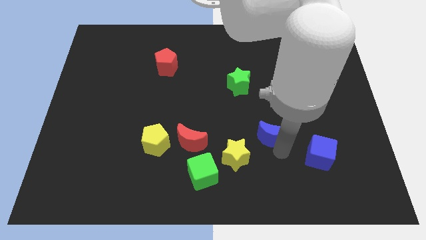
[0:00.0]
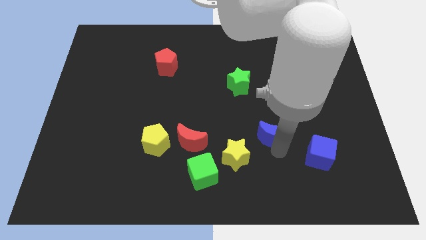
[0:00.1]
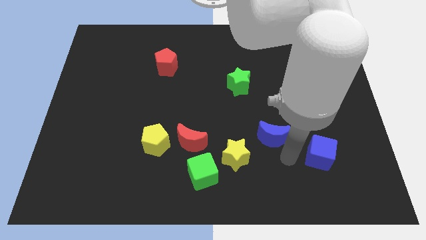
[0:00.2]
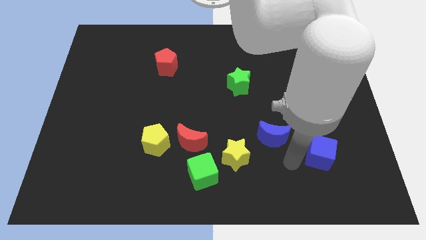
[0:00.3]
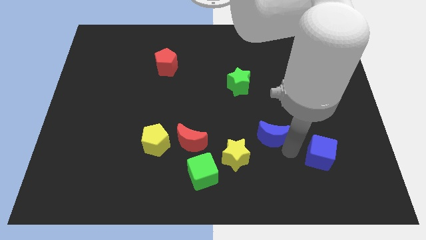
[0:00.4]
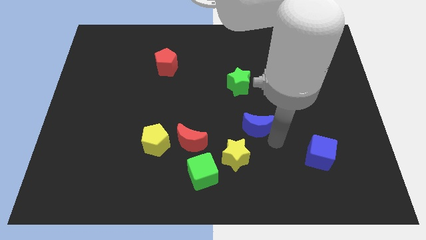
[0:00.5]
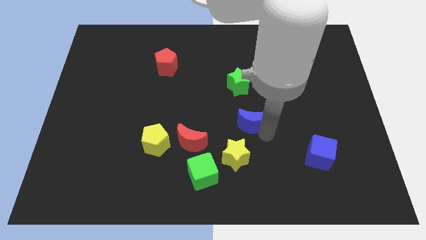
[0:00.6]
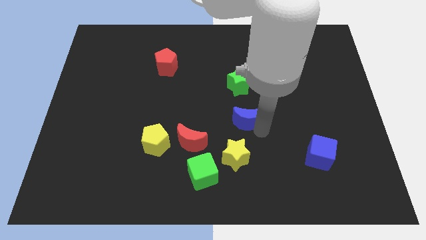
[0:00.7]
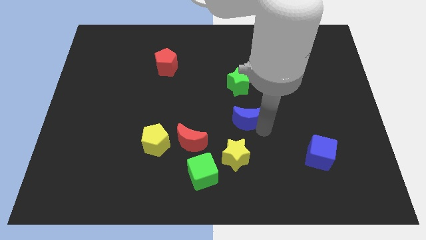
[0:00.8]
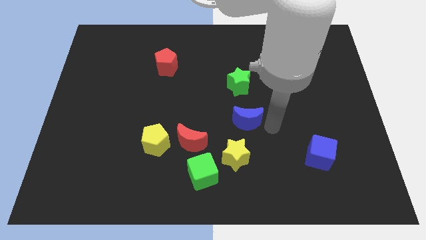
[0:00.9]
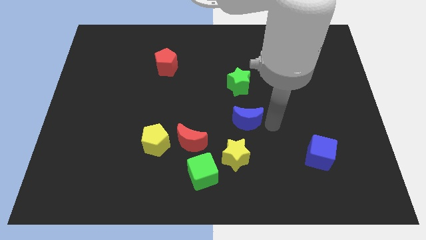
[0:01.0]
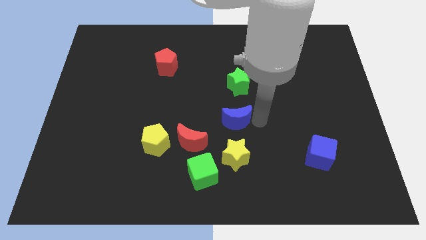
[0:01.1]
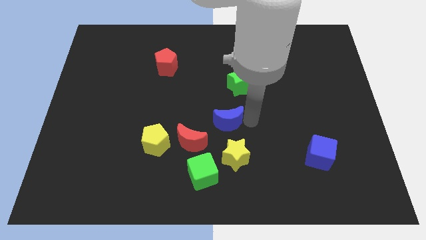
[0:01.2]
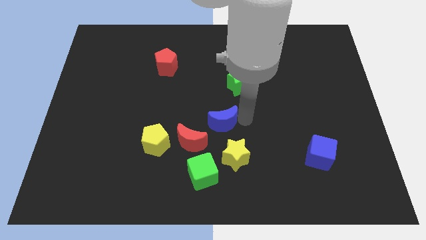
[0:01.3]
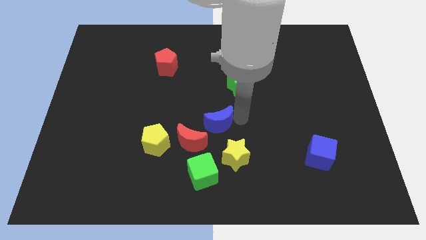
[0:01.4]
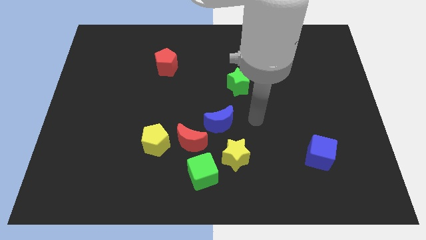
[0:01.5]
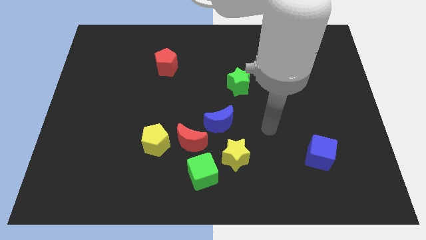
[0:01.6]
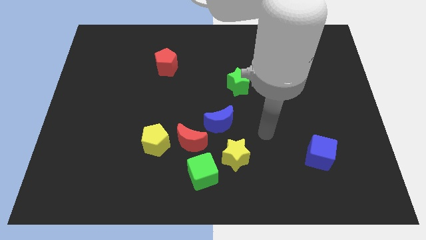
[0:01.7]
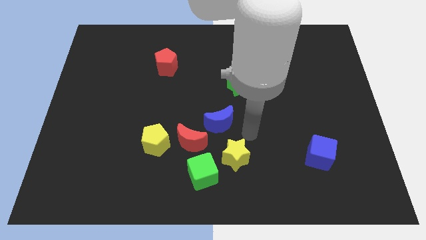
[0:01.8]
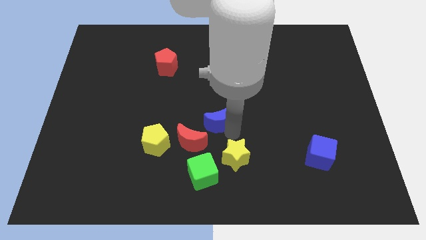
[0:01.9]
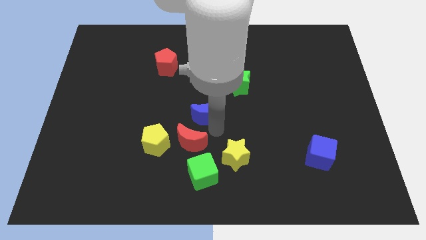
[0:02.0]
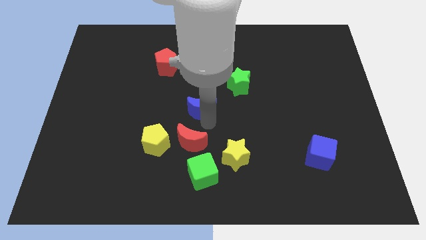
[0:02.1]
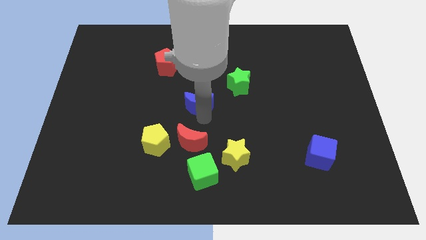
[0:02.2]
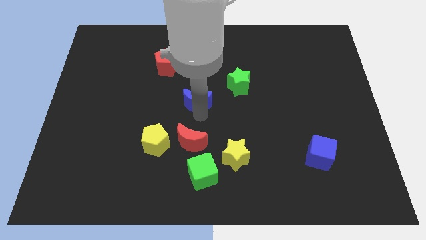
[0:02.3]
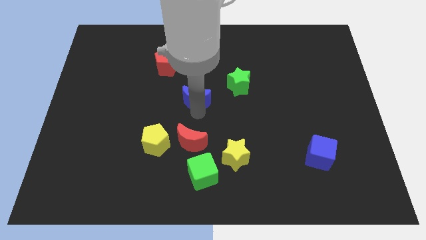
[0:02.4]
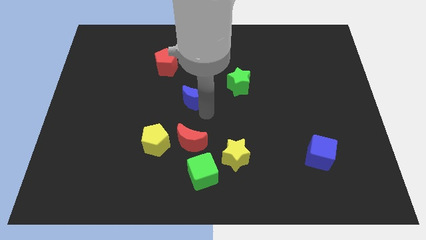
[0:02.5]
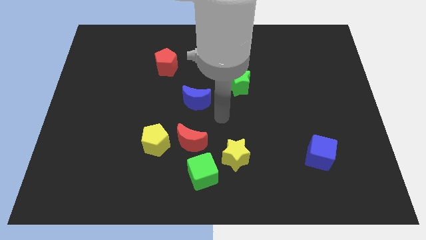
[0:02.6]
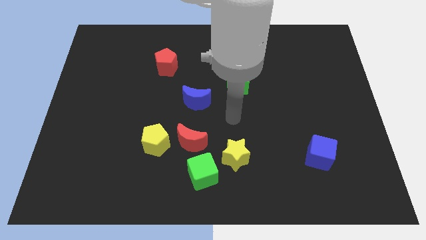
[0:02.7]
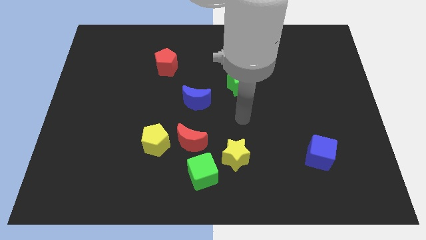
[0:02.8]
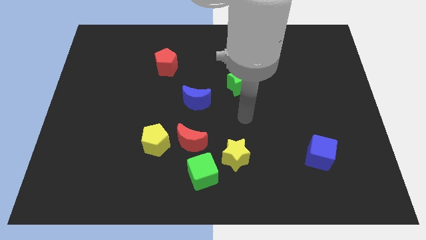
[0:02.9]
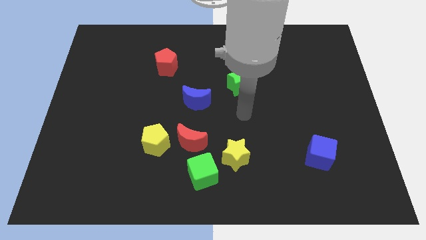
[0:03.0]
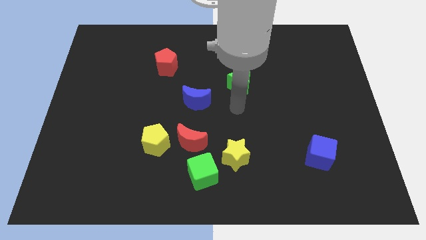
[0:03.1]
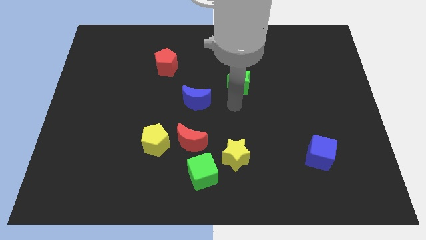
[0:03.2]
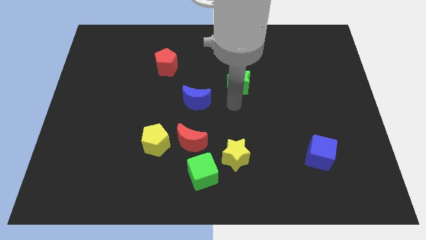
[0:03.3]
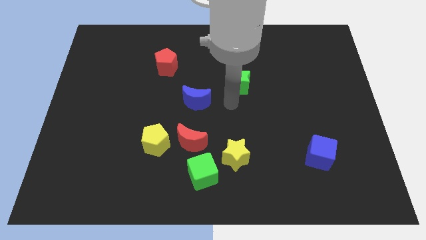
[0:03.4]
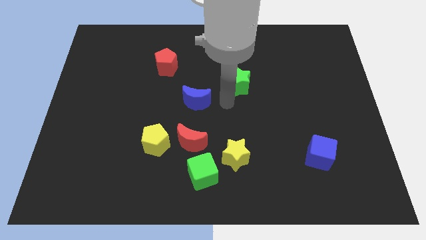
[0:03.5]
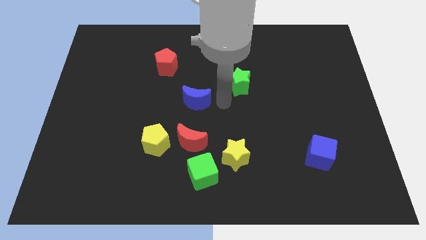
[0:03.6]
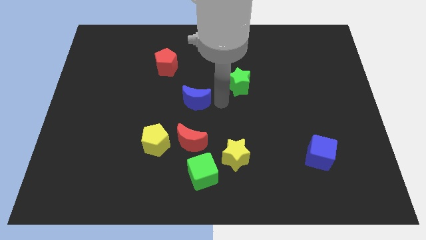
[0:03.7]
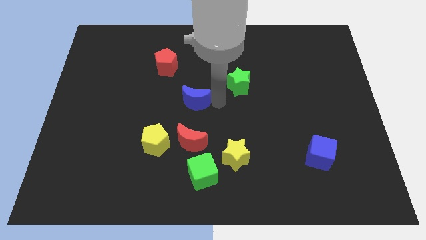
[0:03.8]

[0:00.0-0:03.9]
push the blue moon to the top side of the red crescent

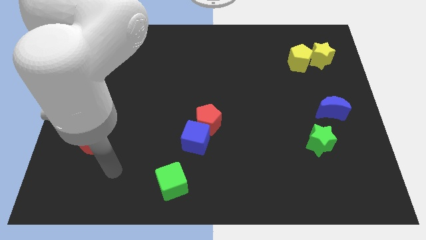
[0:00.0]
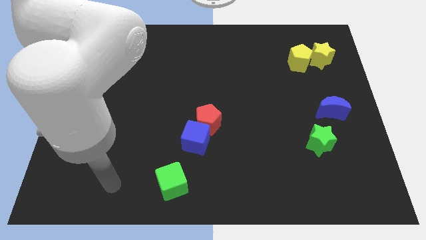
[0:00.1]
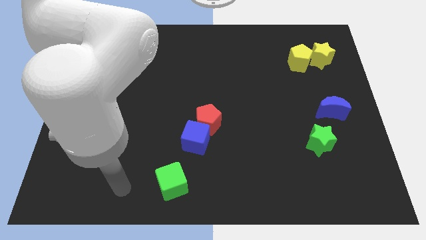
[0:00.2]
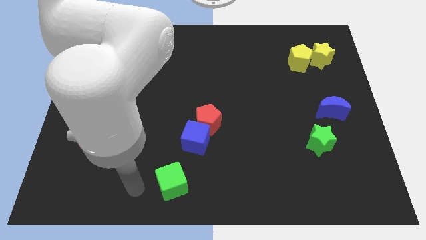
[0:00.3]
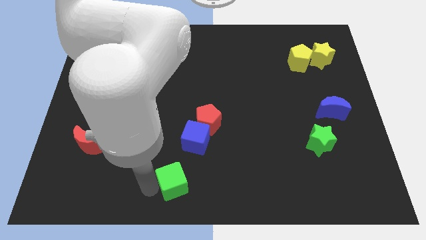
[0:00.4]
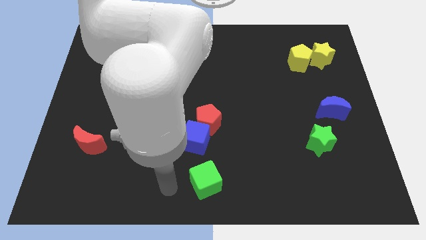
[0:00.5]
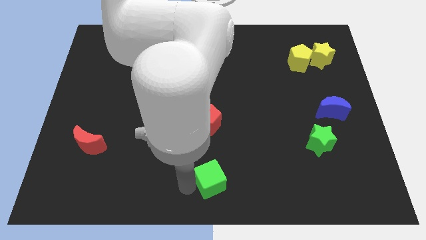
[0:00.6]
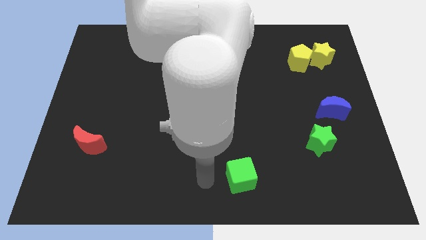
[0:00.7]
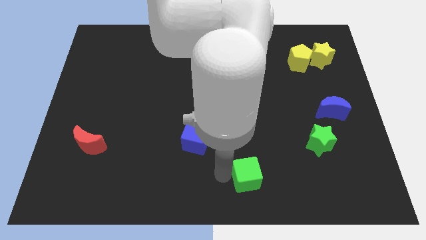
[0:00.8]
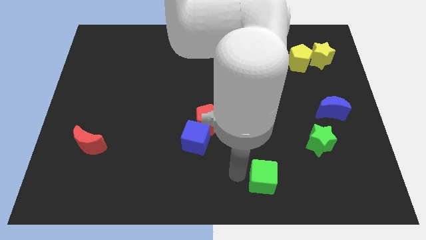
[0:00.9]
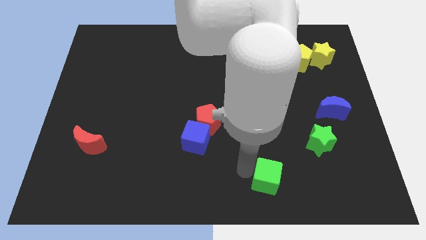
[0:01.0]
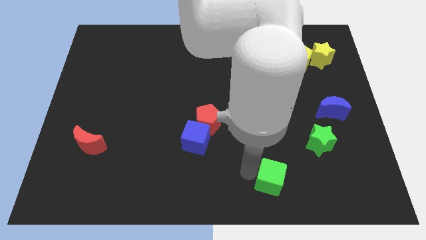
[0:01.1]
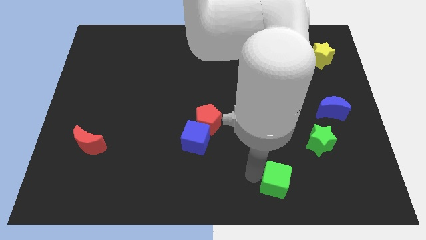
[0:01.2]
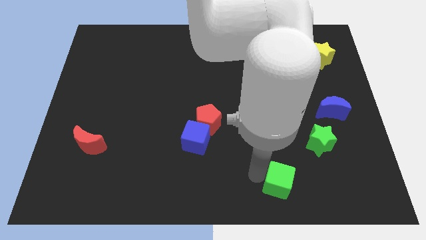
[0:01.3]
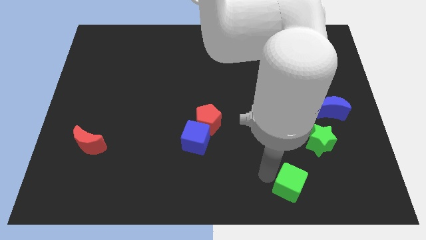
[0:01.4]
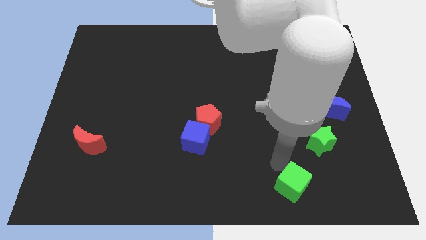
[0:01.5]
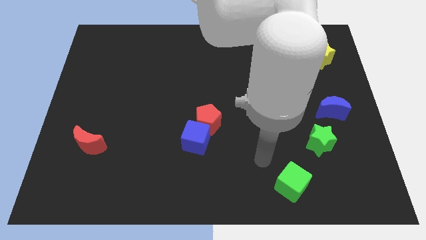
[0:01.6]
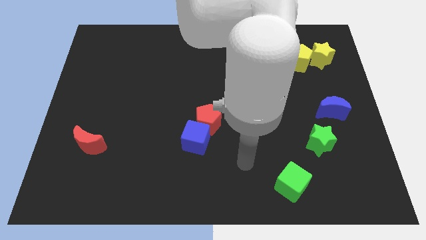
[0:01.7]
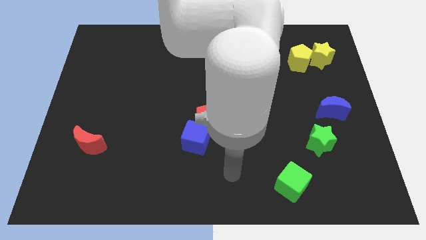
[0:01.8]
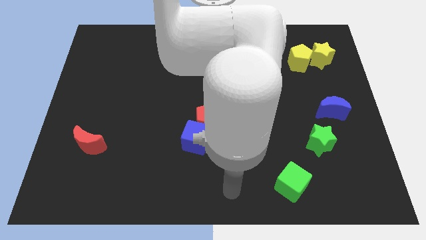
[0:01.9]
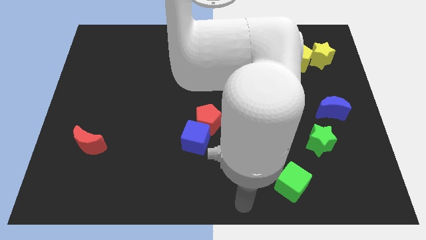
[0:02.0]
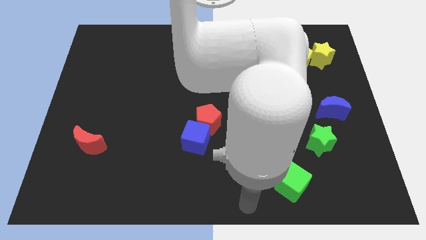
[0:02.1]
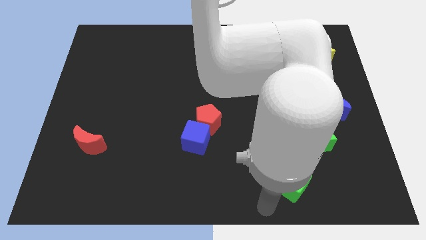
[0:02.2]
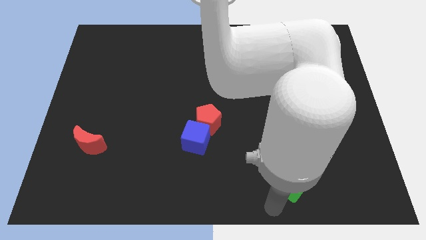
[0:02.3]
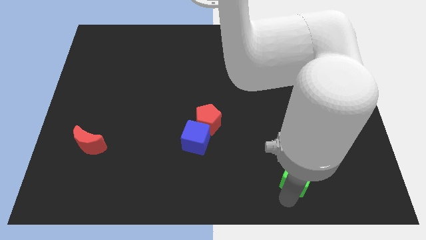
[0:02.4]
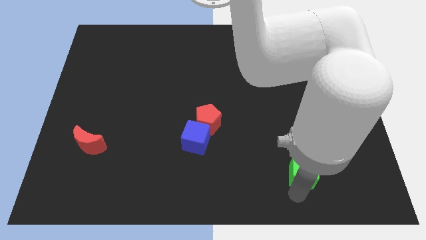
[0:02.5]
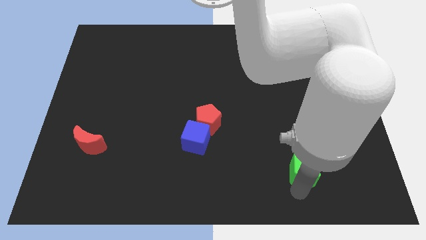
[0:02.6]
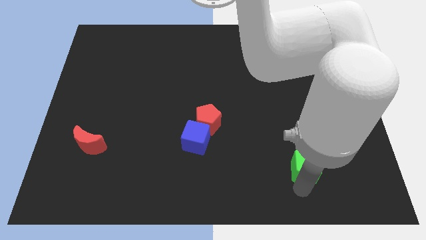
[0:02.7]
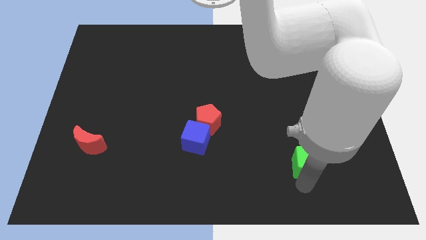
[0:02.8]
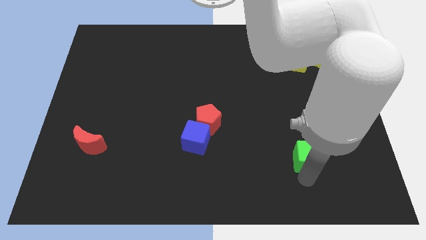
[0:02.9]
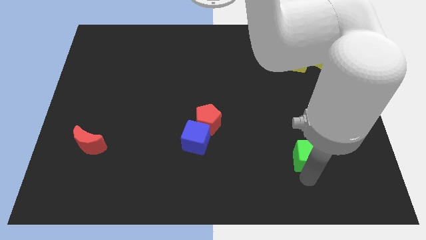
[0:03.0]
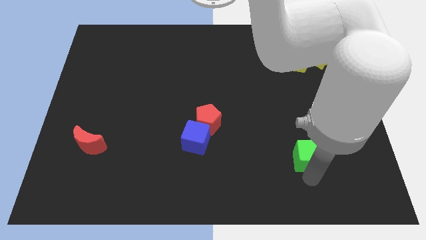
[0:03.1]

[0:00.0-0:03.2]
move the green cube into the green star

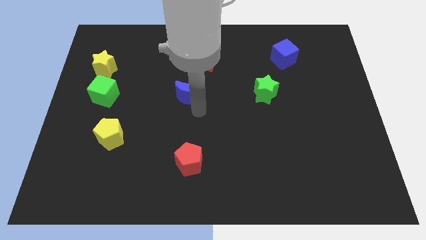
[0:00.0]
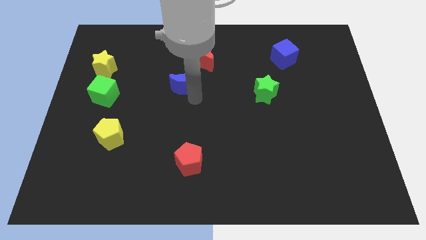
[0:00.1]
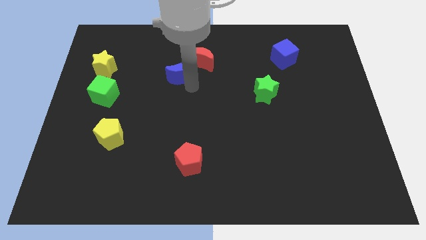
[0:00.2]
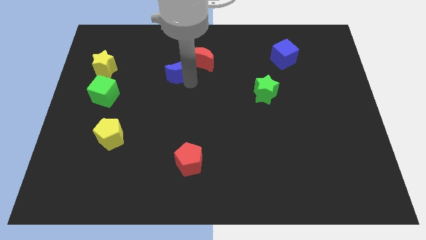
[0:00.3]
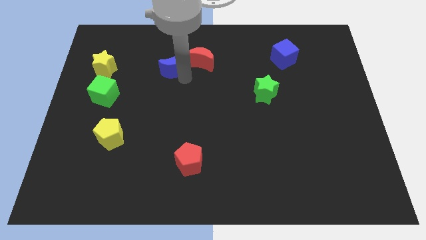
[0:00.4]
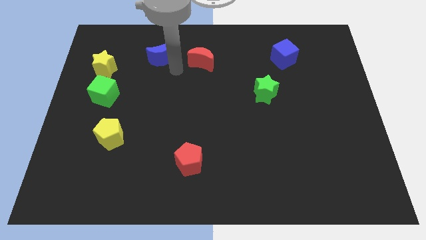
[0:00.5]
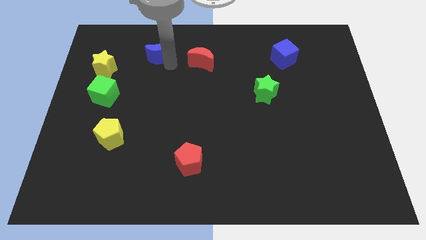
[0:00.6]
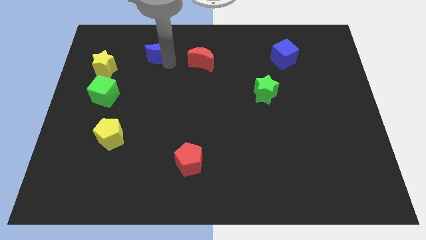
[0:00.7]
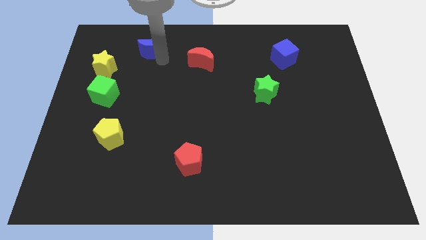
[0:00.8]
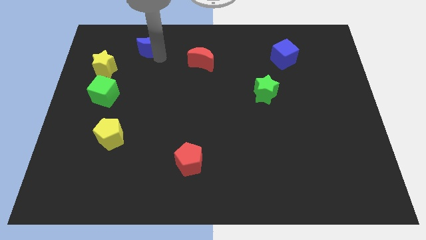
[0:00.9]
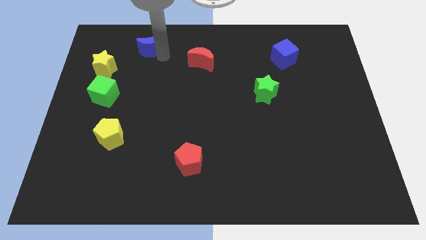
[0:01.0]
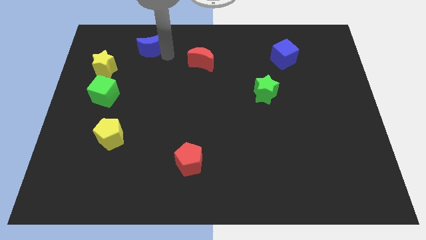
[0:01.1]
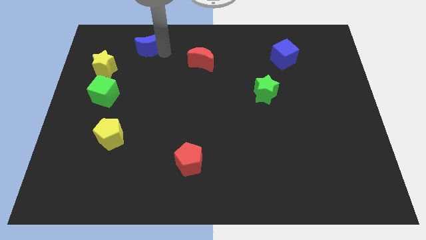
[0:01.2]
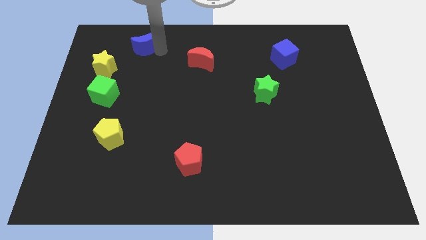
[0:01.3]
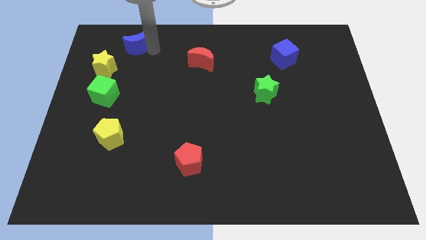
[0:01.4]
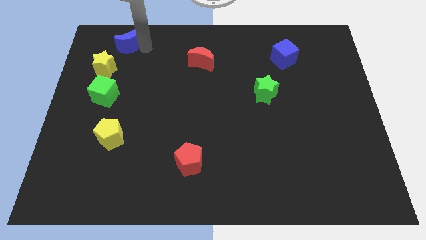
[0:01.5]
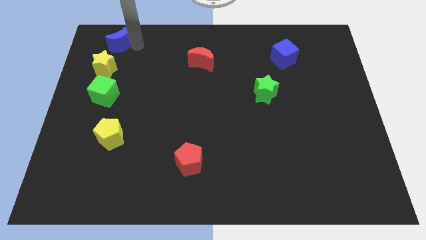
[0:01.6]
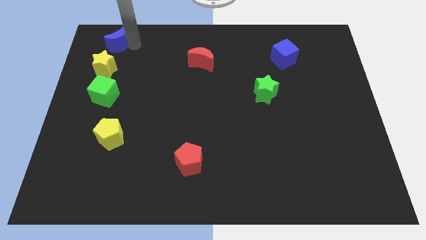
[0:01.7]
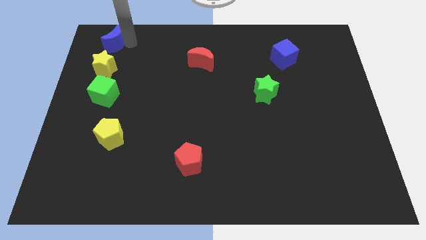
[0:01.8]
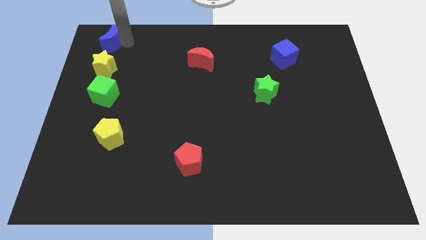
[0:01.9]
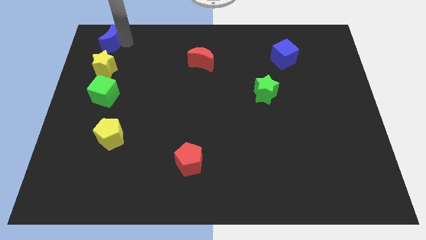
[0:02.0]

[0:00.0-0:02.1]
move the blue crescent to the top of the yellow star

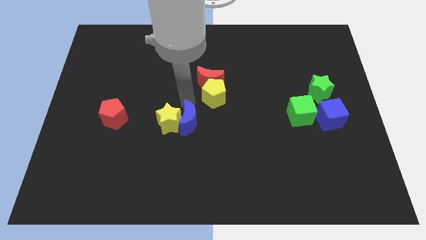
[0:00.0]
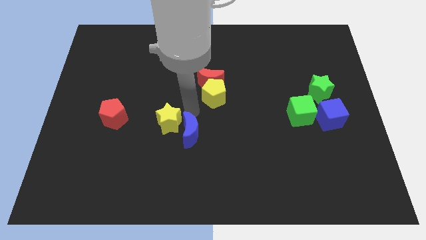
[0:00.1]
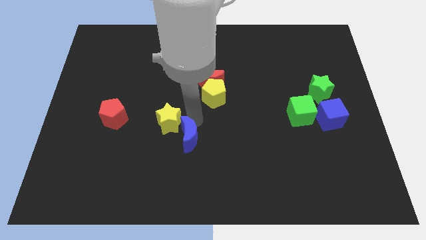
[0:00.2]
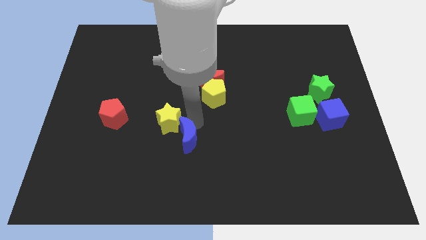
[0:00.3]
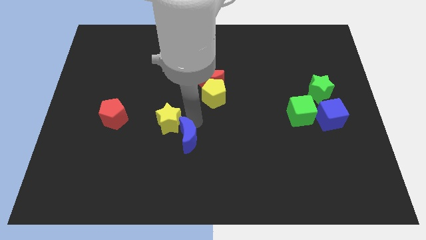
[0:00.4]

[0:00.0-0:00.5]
move the blue crescent slightly to the right side bottom of the yellow star
